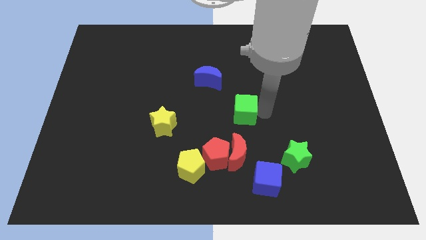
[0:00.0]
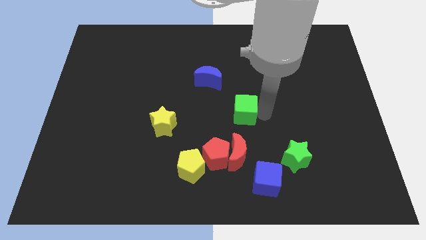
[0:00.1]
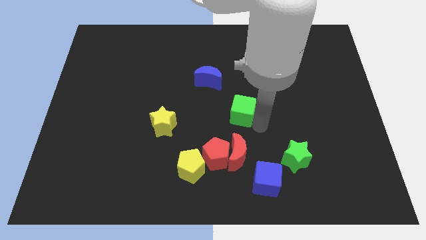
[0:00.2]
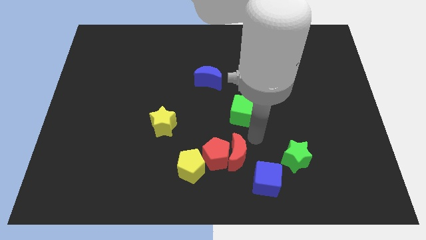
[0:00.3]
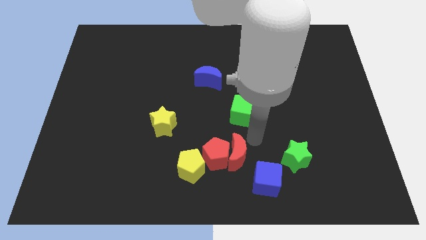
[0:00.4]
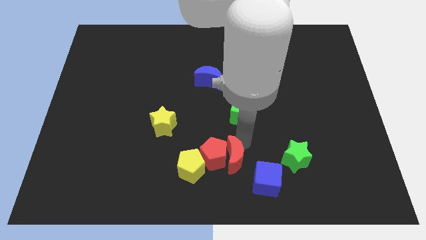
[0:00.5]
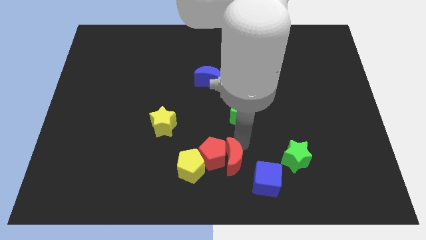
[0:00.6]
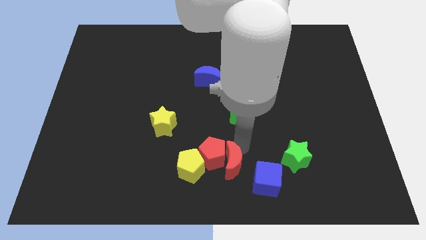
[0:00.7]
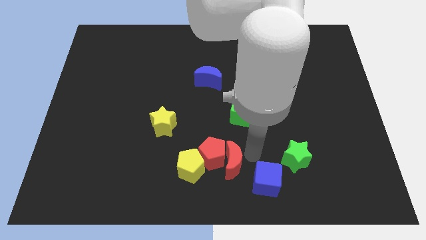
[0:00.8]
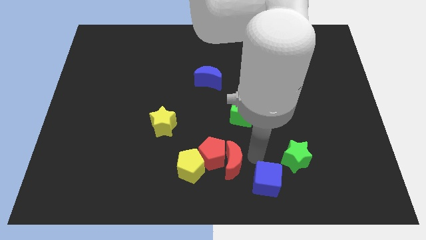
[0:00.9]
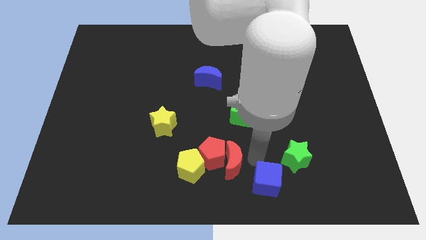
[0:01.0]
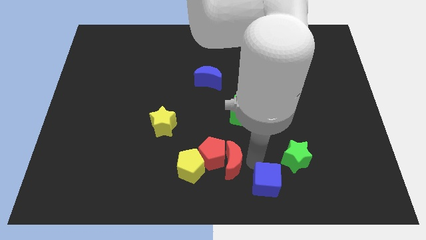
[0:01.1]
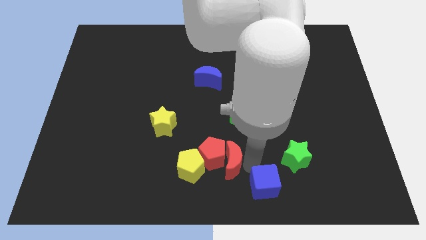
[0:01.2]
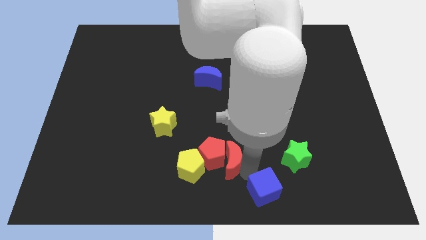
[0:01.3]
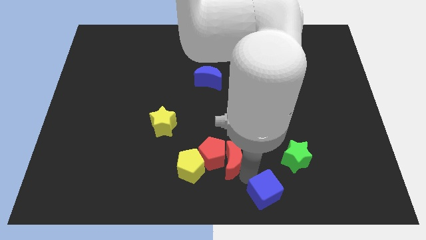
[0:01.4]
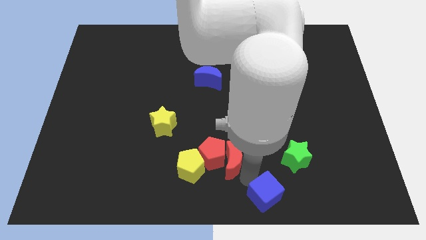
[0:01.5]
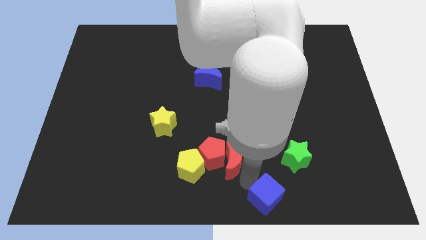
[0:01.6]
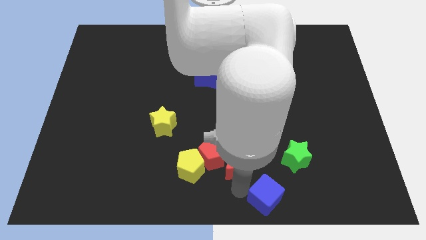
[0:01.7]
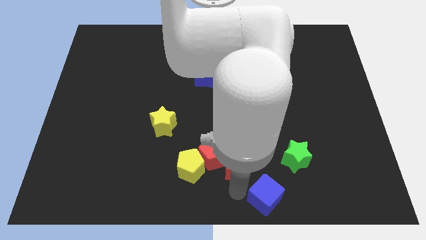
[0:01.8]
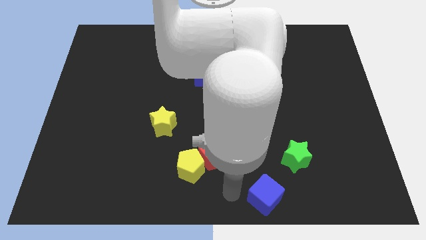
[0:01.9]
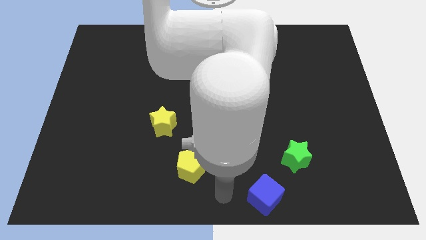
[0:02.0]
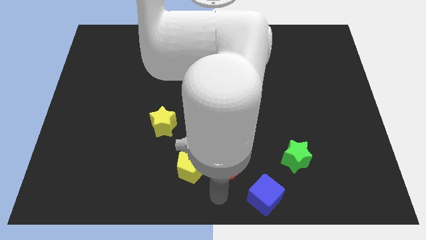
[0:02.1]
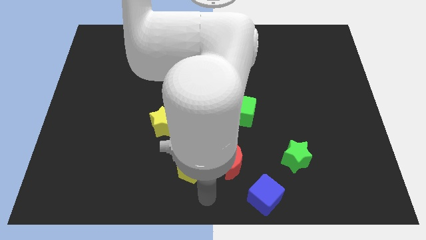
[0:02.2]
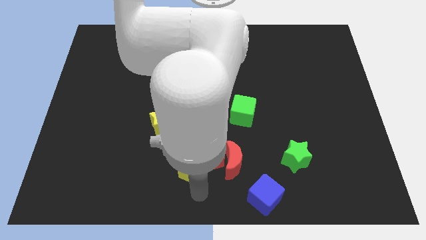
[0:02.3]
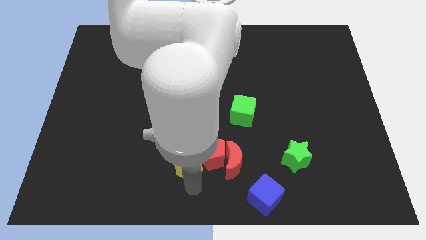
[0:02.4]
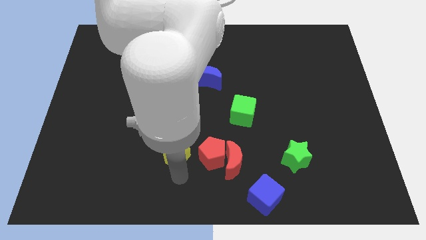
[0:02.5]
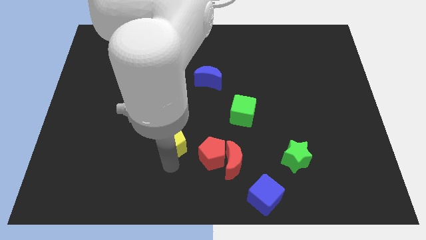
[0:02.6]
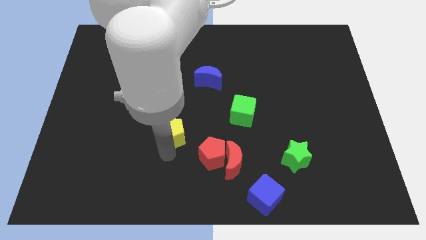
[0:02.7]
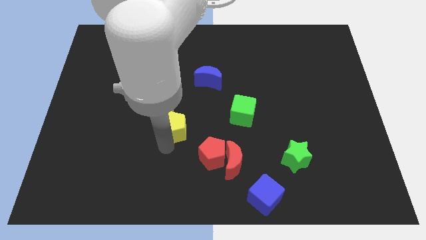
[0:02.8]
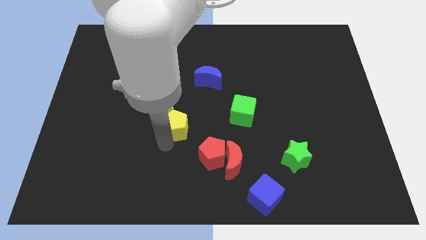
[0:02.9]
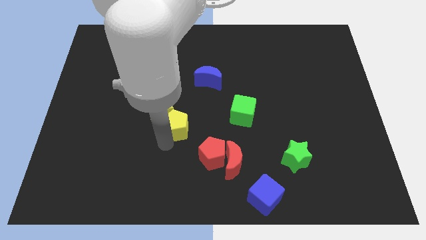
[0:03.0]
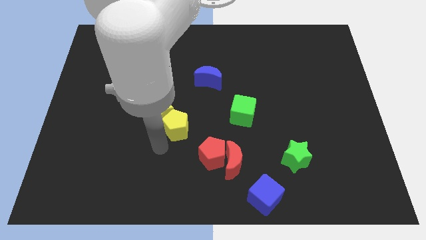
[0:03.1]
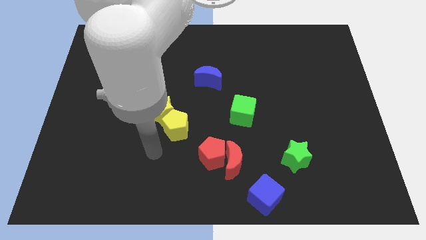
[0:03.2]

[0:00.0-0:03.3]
place yellow pentagon to the bottom yellow star

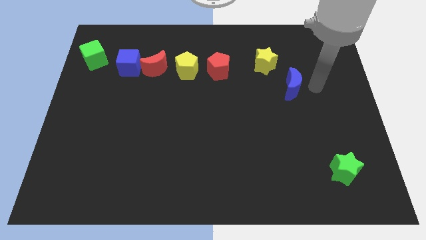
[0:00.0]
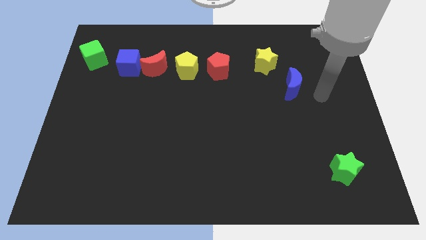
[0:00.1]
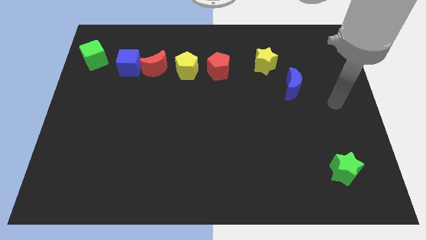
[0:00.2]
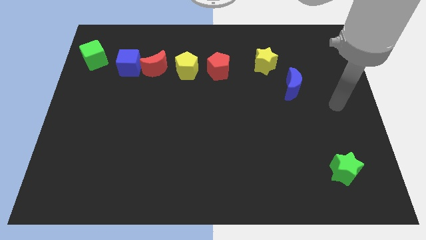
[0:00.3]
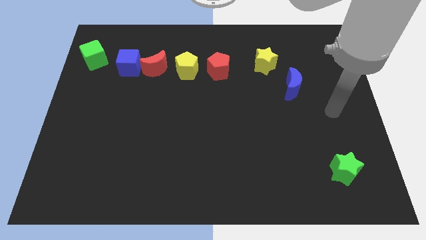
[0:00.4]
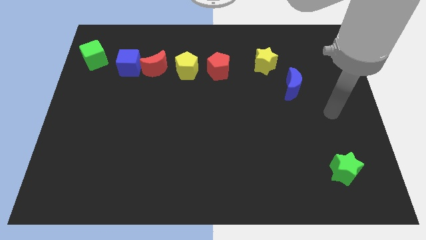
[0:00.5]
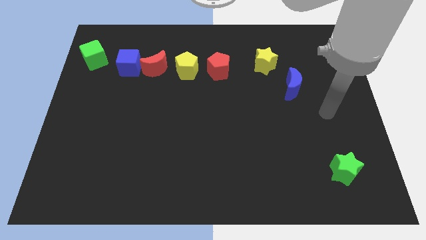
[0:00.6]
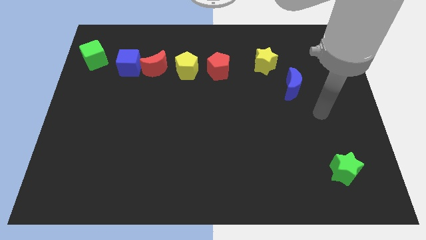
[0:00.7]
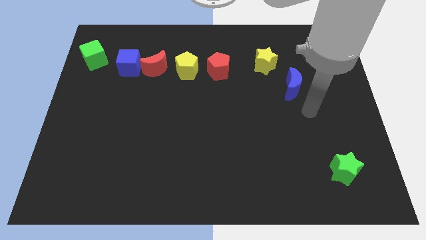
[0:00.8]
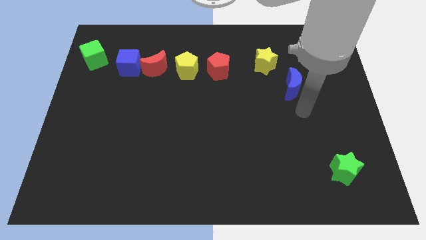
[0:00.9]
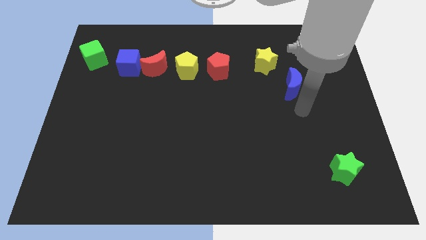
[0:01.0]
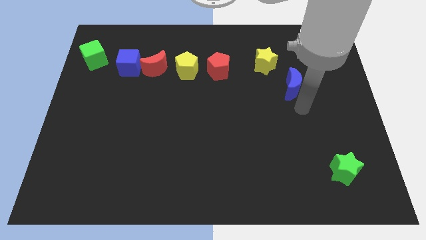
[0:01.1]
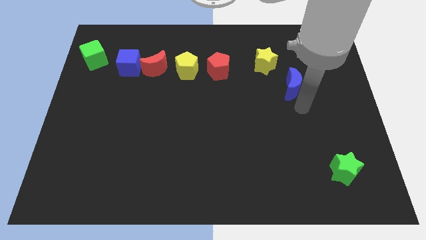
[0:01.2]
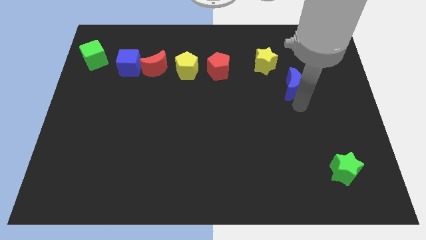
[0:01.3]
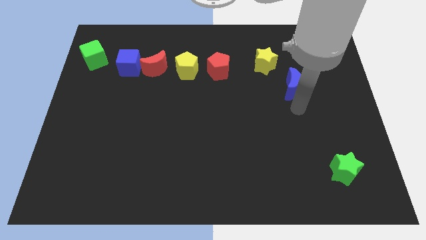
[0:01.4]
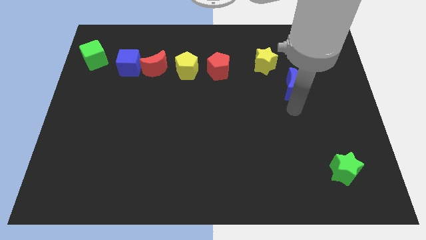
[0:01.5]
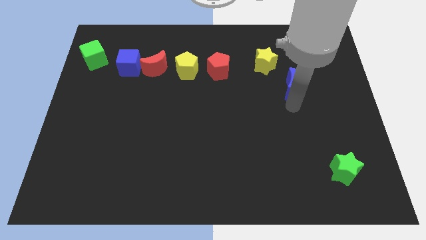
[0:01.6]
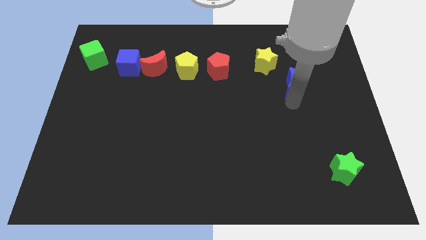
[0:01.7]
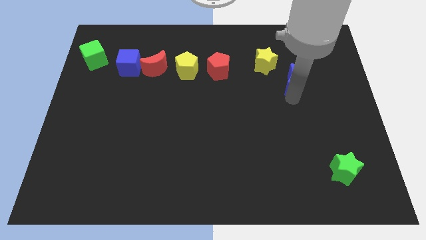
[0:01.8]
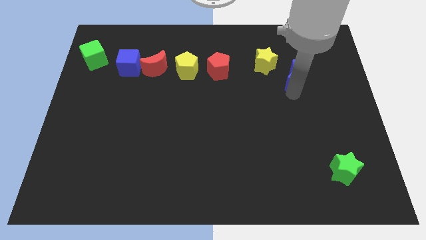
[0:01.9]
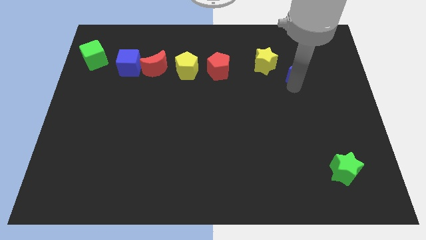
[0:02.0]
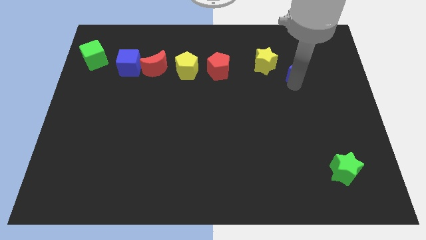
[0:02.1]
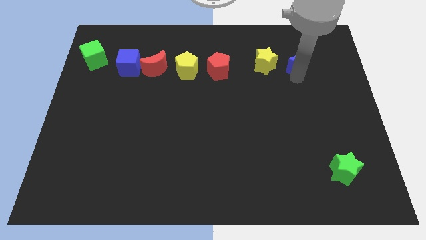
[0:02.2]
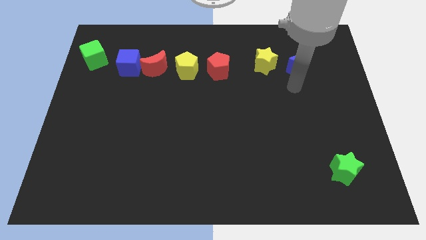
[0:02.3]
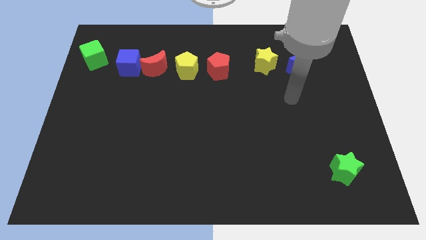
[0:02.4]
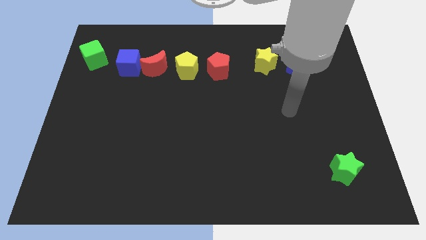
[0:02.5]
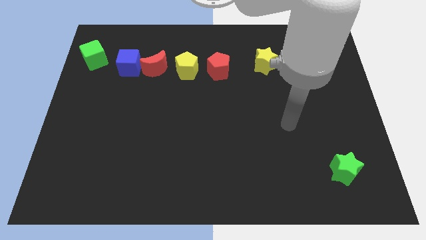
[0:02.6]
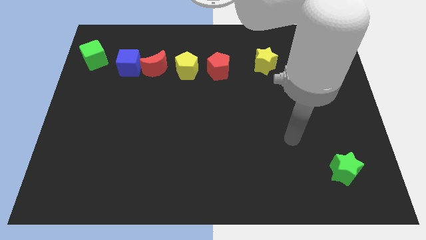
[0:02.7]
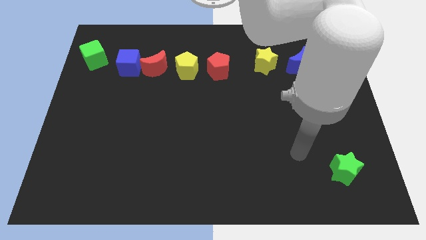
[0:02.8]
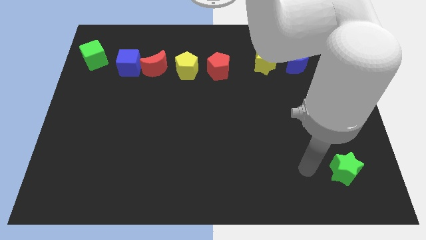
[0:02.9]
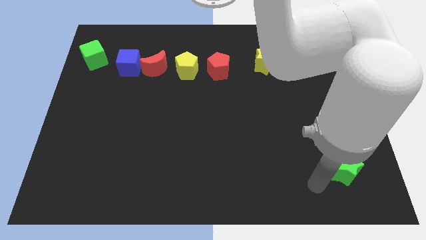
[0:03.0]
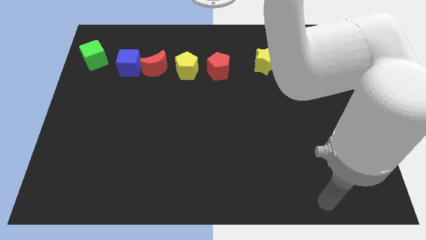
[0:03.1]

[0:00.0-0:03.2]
move blue moon to the right of yellow star

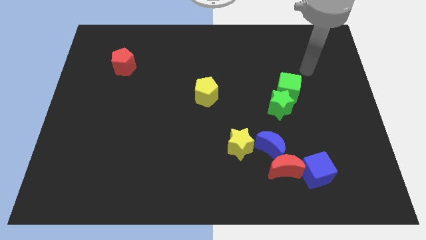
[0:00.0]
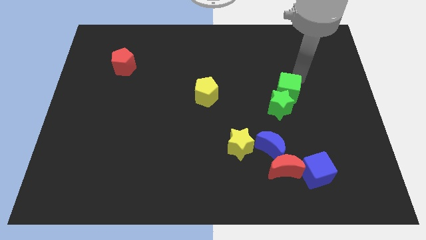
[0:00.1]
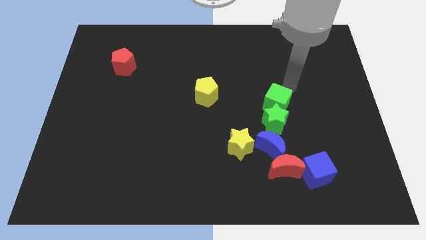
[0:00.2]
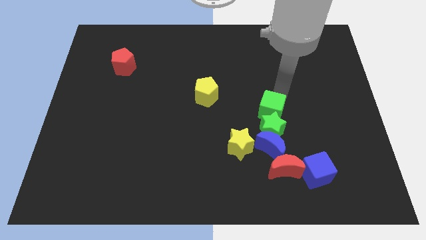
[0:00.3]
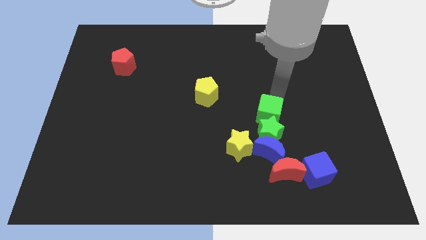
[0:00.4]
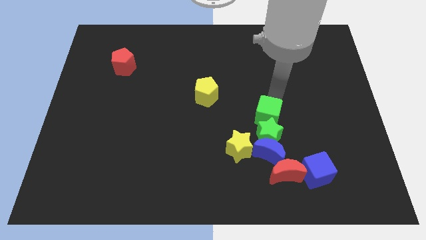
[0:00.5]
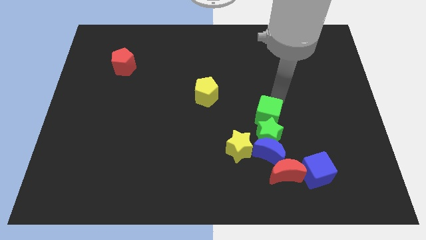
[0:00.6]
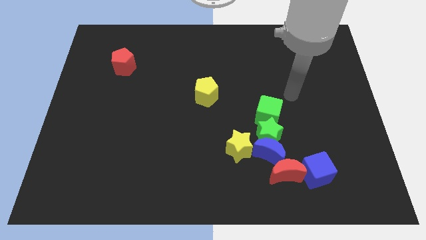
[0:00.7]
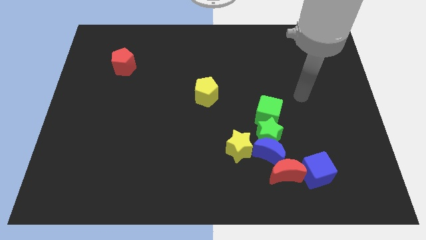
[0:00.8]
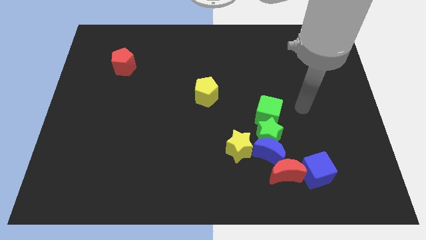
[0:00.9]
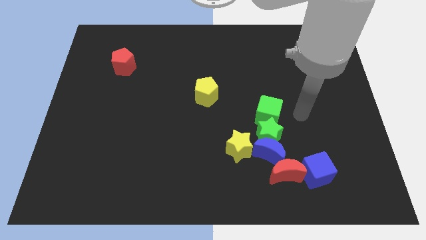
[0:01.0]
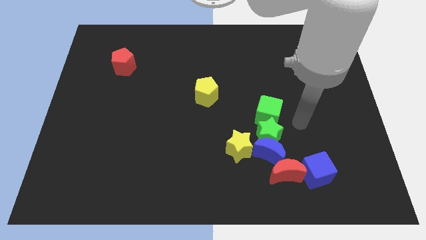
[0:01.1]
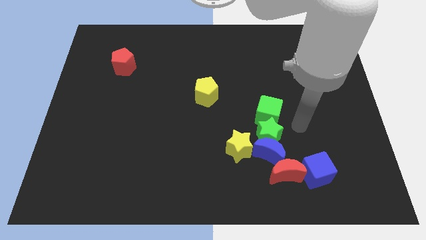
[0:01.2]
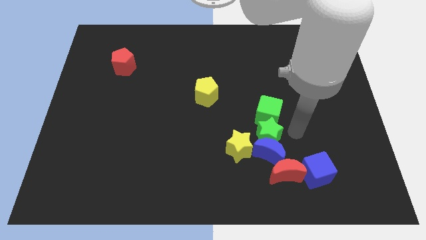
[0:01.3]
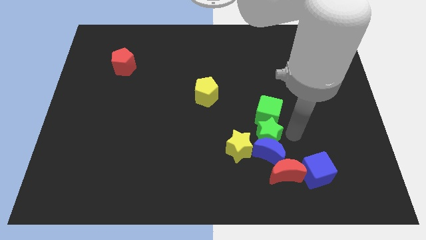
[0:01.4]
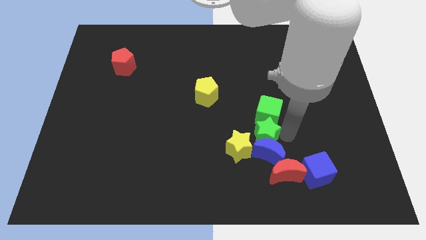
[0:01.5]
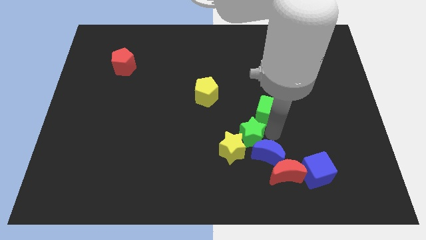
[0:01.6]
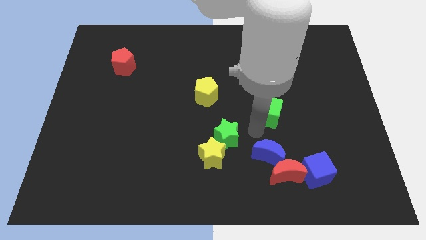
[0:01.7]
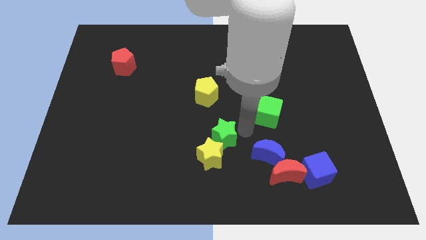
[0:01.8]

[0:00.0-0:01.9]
push the green star to the center

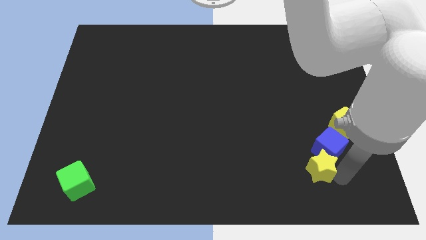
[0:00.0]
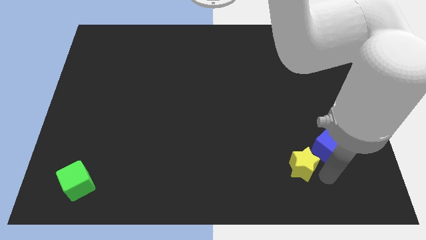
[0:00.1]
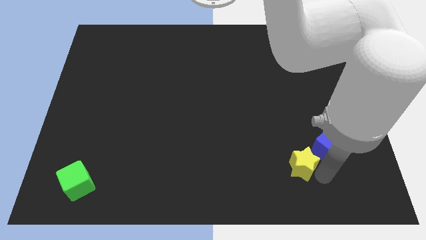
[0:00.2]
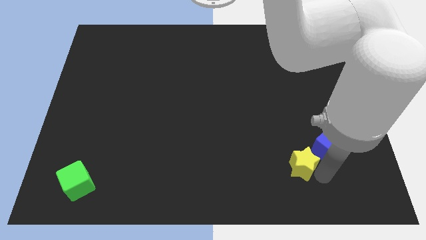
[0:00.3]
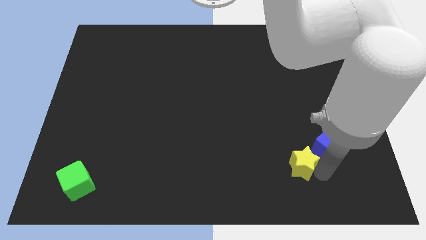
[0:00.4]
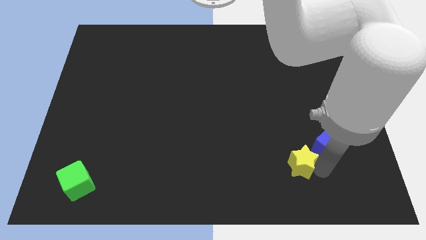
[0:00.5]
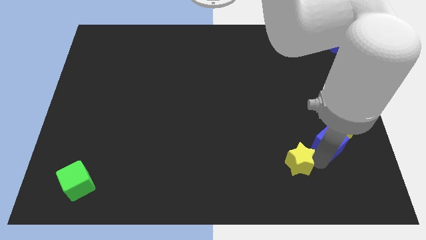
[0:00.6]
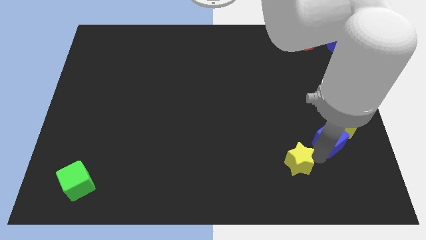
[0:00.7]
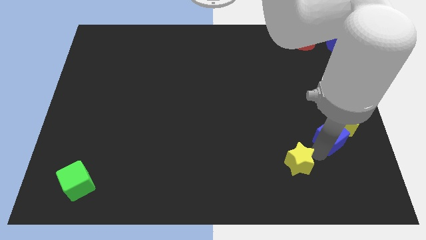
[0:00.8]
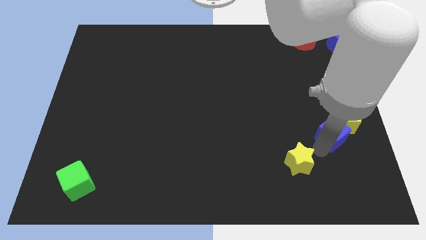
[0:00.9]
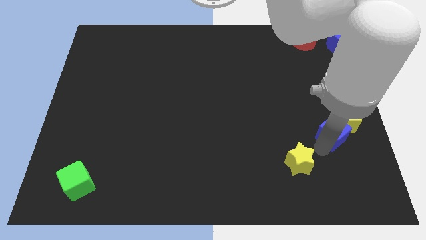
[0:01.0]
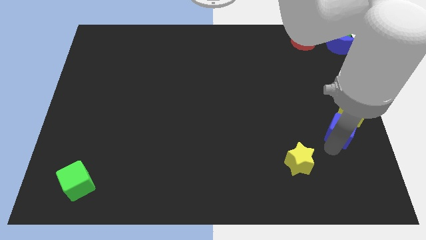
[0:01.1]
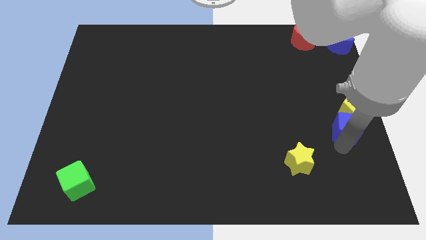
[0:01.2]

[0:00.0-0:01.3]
move the yellow star slightly on the top side
